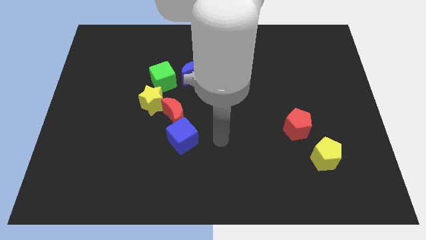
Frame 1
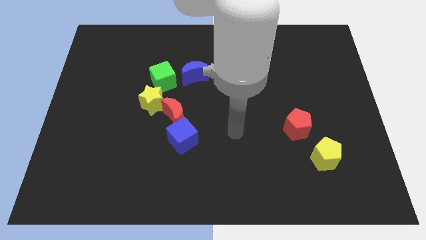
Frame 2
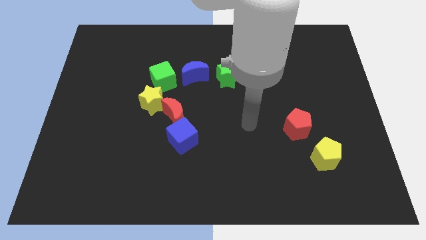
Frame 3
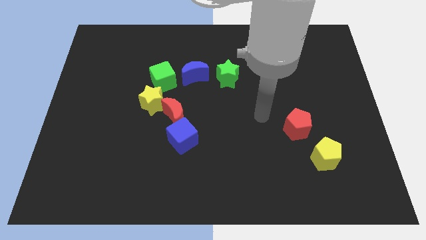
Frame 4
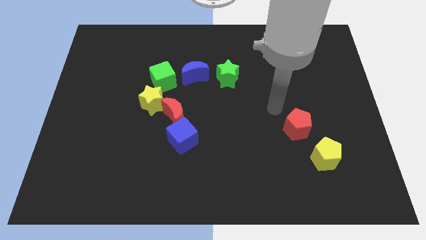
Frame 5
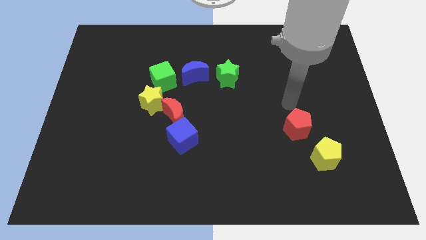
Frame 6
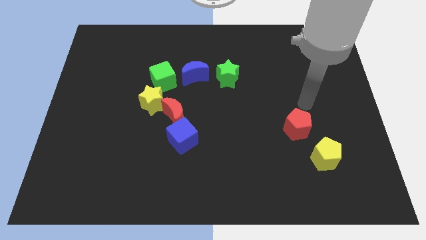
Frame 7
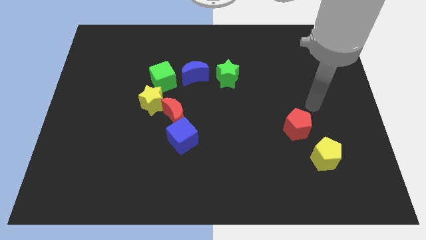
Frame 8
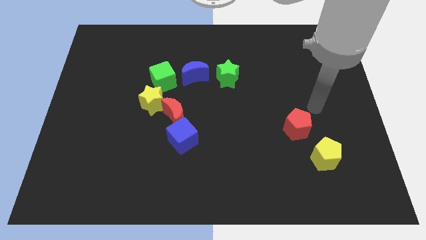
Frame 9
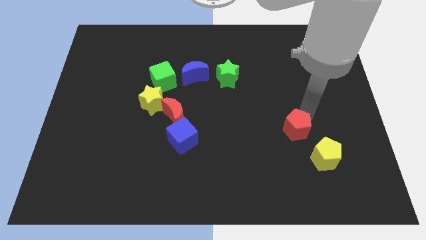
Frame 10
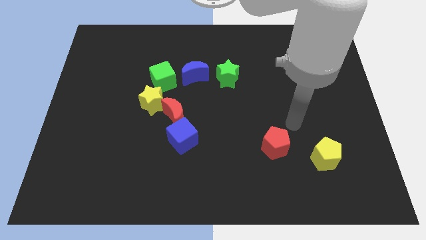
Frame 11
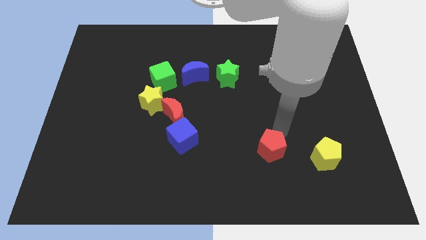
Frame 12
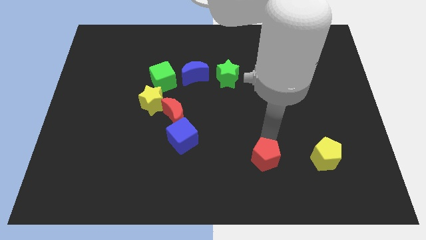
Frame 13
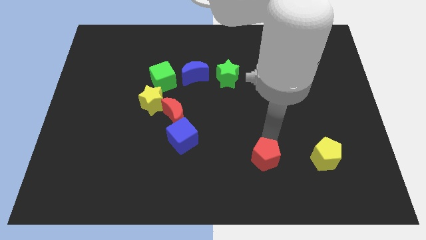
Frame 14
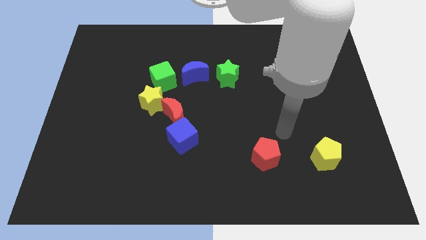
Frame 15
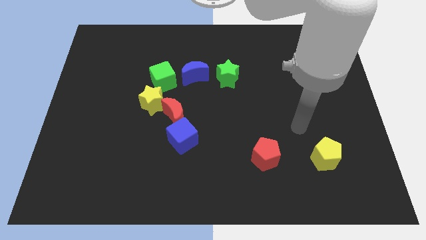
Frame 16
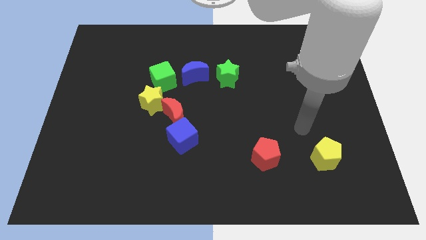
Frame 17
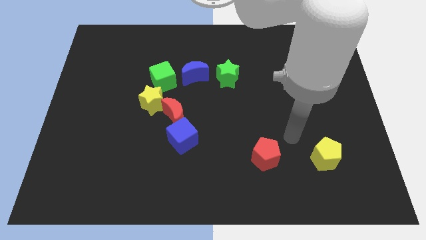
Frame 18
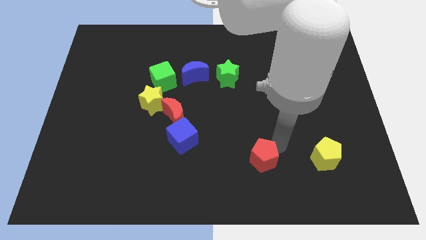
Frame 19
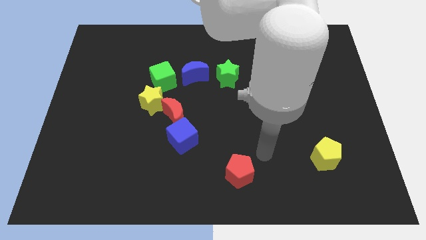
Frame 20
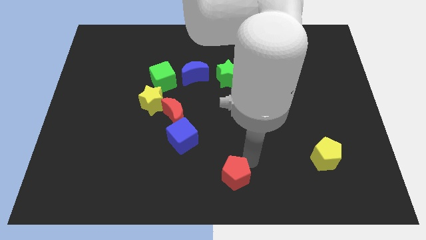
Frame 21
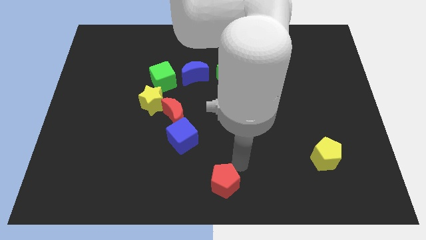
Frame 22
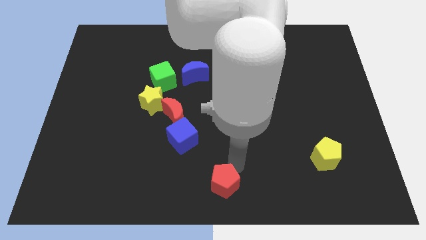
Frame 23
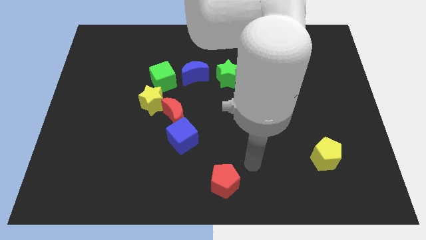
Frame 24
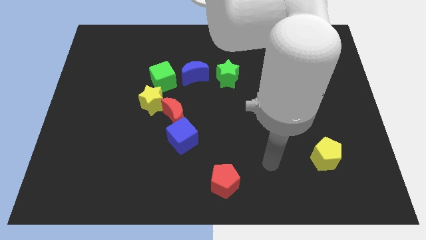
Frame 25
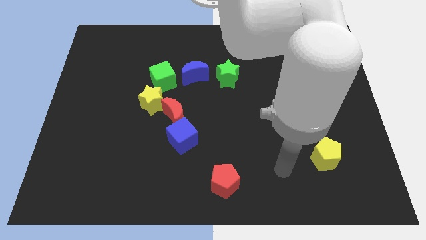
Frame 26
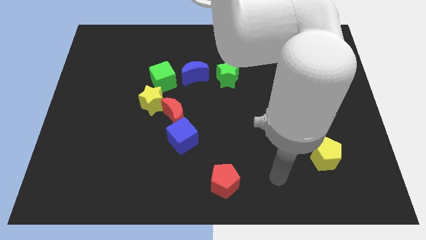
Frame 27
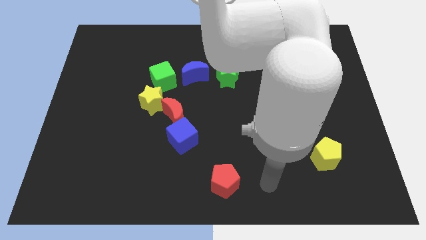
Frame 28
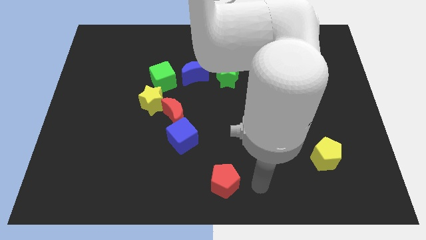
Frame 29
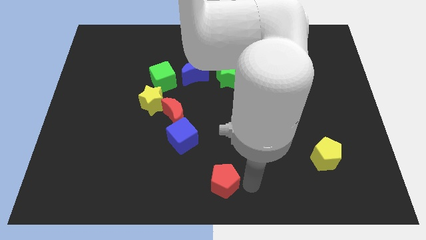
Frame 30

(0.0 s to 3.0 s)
place the red pentagon at bottom center of the board

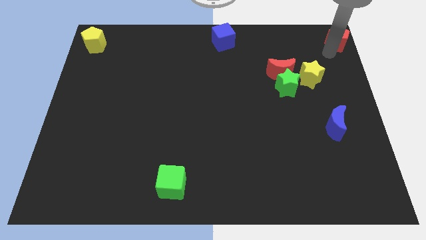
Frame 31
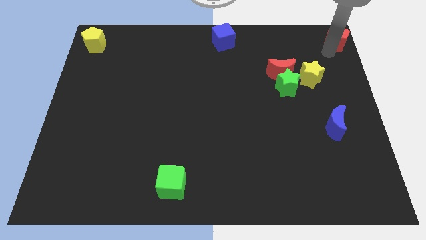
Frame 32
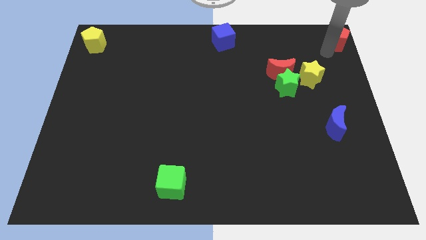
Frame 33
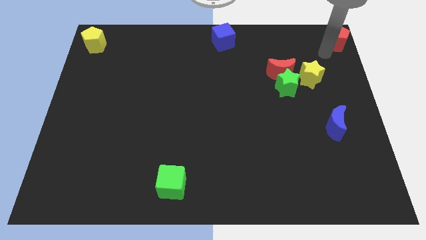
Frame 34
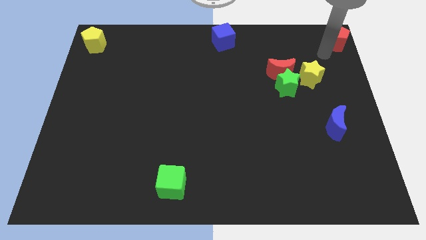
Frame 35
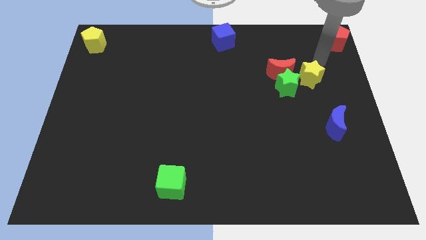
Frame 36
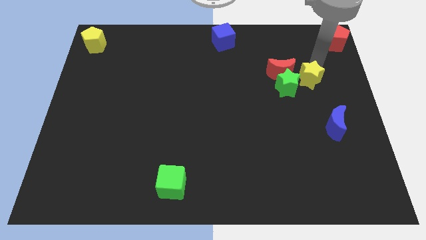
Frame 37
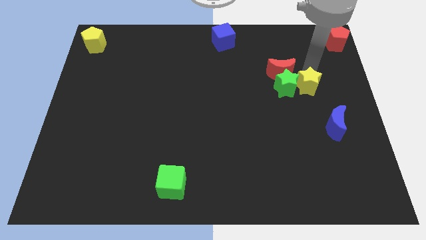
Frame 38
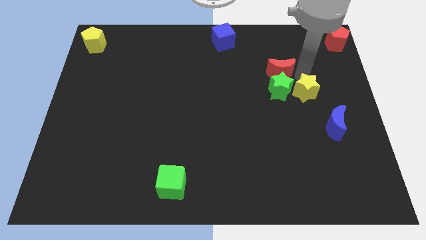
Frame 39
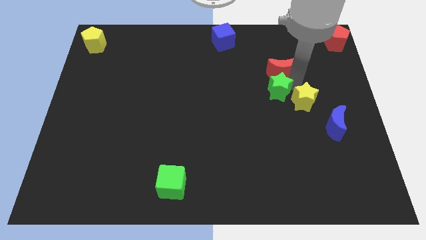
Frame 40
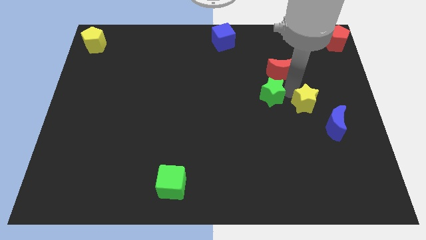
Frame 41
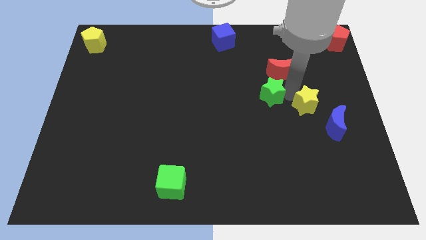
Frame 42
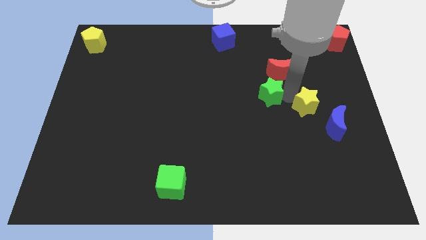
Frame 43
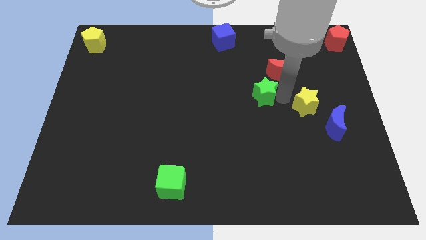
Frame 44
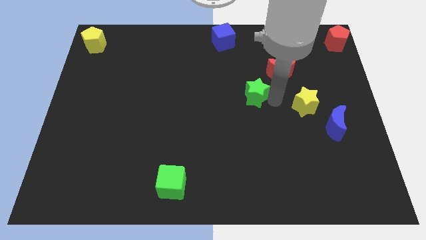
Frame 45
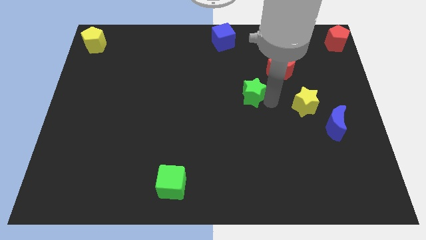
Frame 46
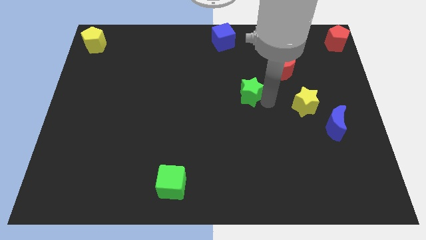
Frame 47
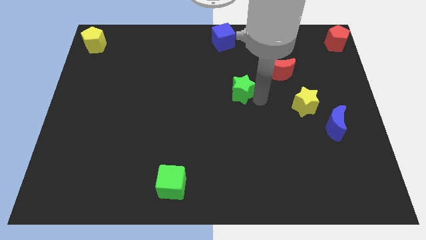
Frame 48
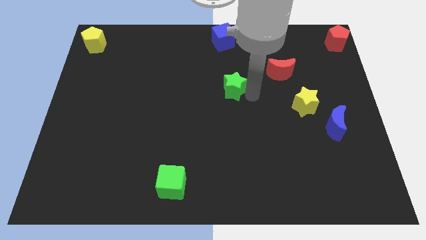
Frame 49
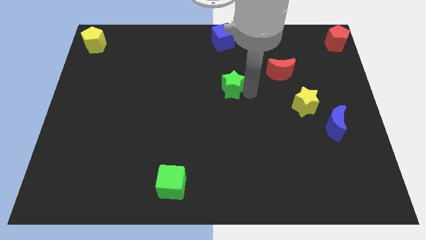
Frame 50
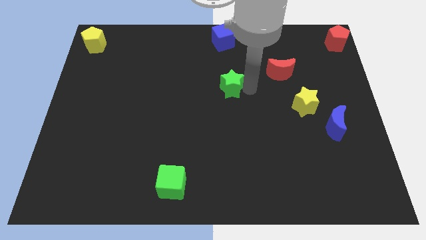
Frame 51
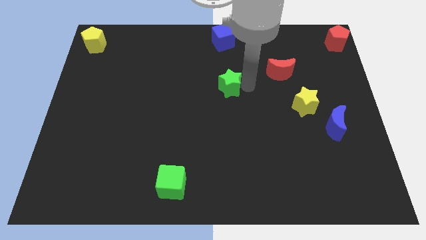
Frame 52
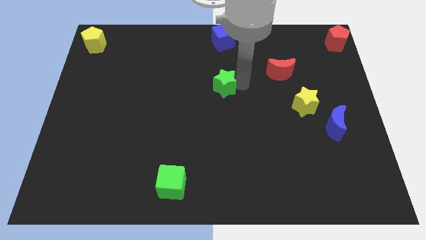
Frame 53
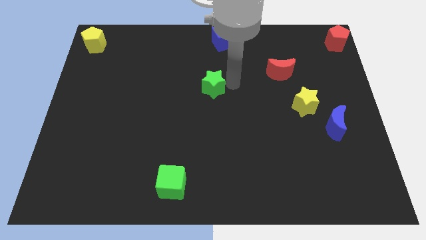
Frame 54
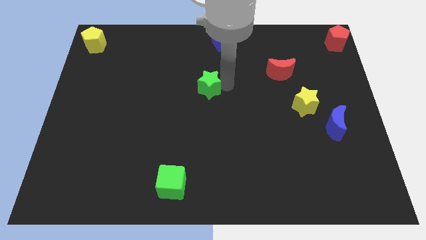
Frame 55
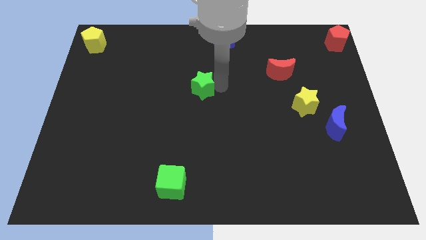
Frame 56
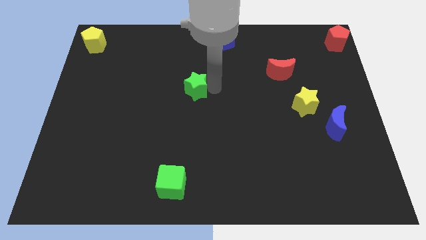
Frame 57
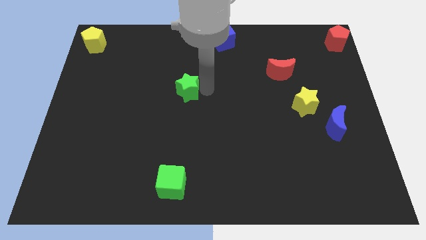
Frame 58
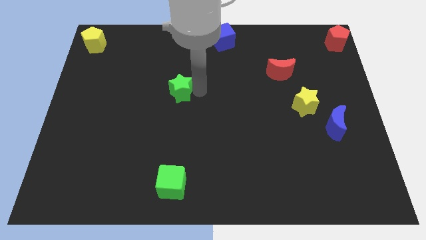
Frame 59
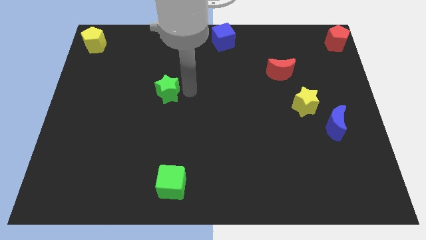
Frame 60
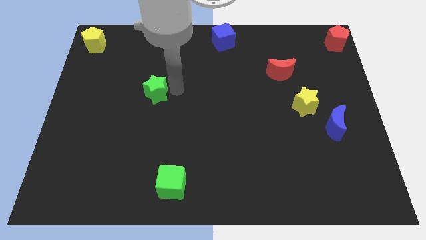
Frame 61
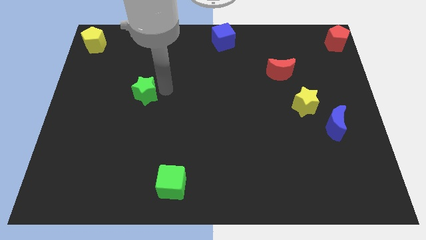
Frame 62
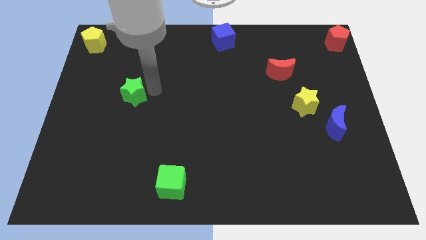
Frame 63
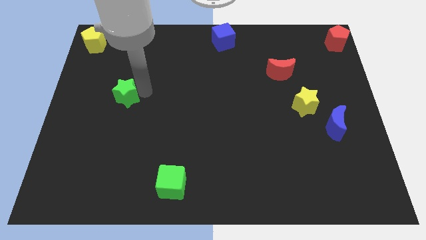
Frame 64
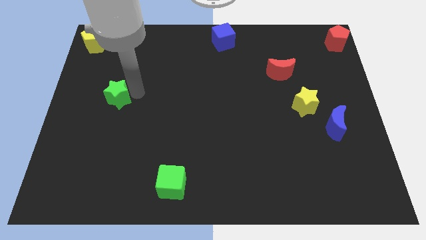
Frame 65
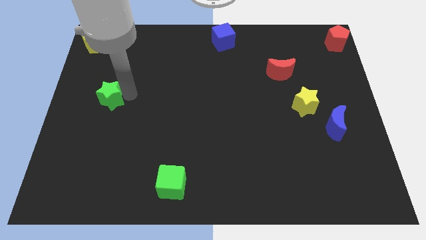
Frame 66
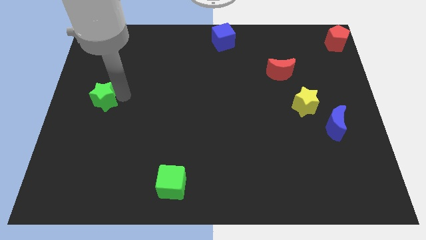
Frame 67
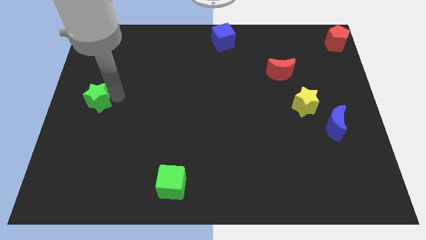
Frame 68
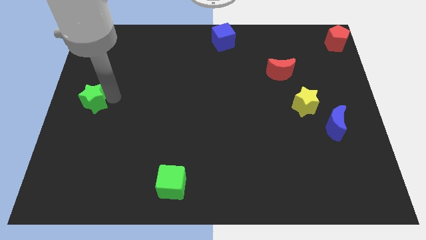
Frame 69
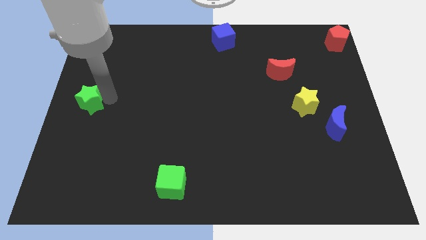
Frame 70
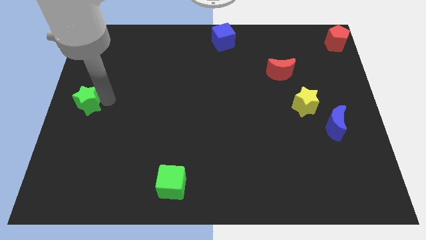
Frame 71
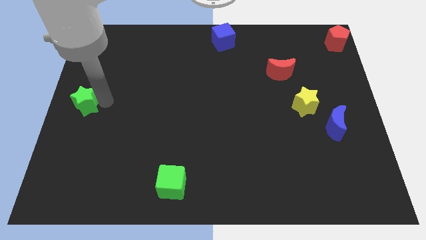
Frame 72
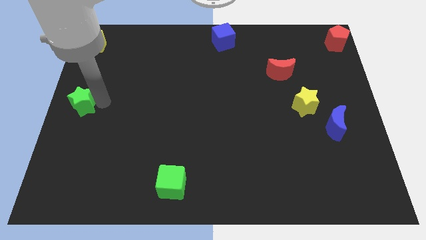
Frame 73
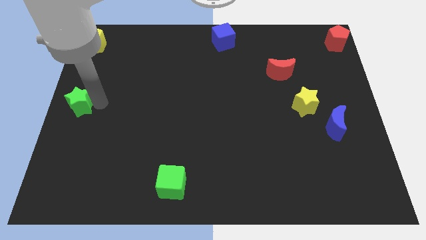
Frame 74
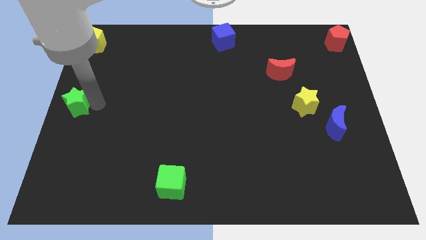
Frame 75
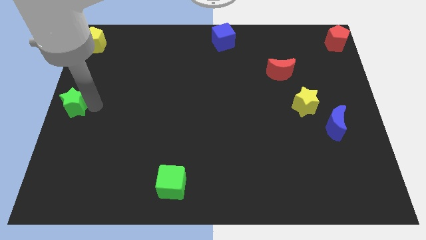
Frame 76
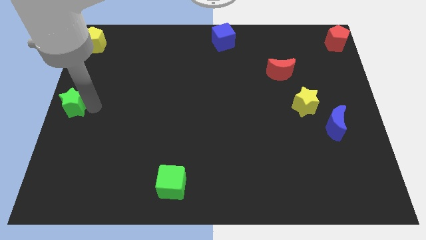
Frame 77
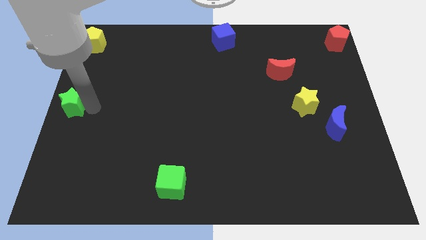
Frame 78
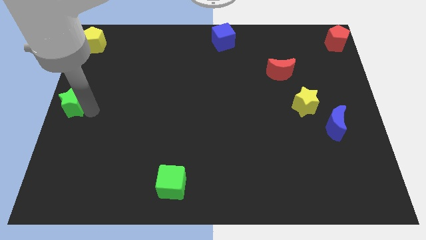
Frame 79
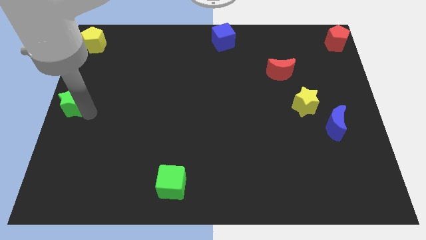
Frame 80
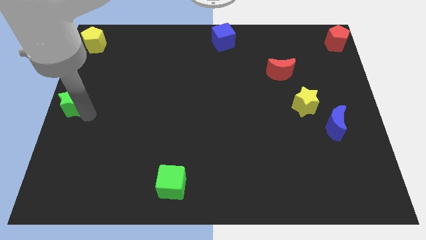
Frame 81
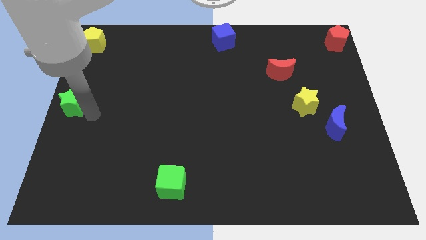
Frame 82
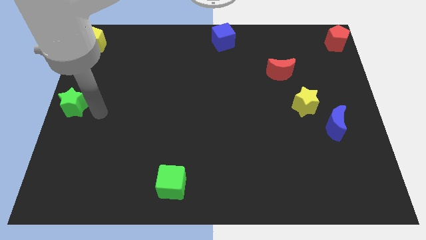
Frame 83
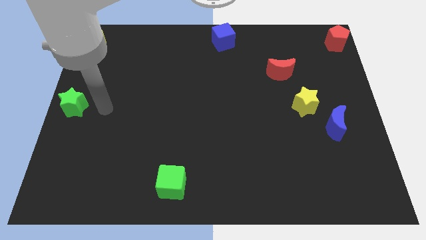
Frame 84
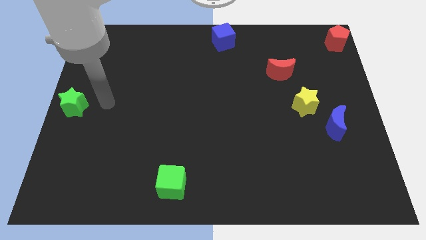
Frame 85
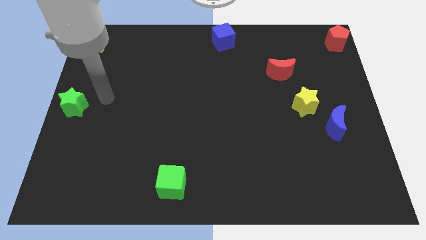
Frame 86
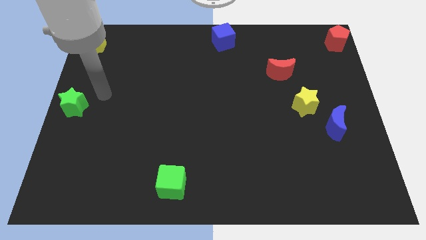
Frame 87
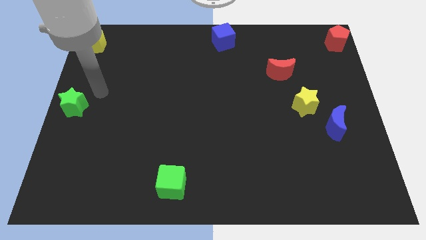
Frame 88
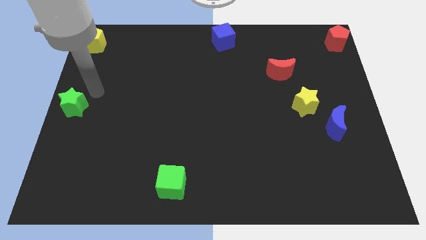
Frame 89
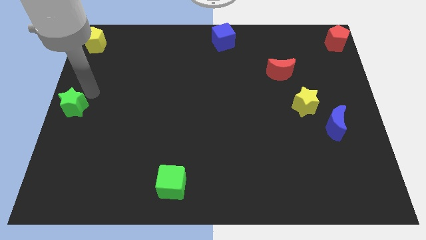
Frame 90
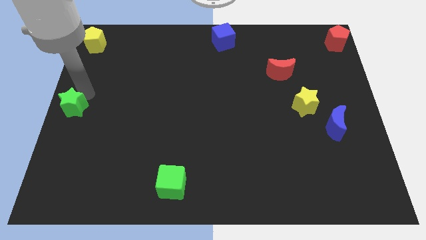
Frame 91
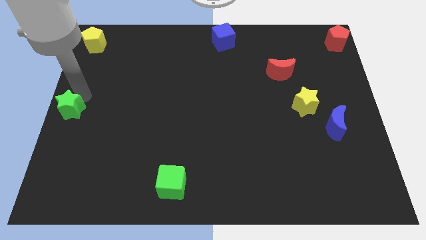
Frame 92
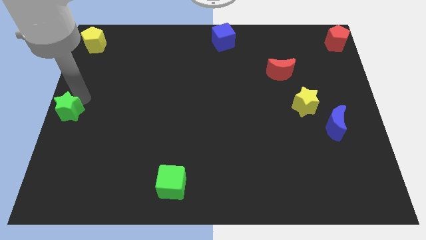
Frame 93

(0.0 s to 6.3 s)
drag green star towards middle left side of the board
